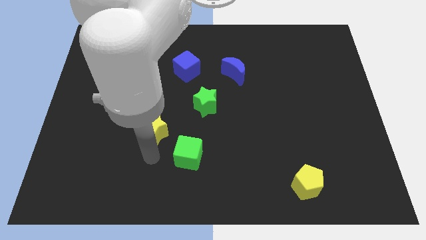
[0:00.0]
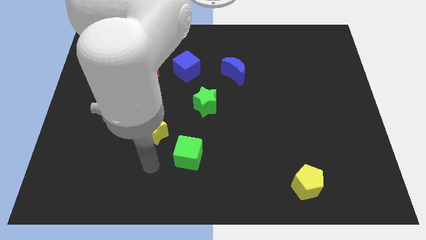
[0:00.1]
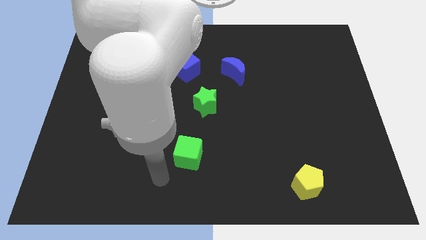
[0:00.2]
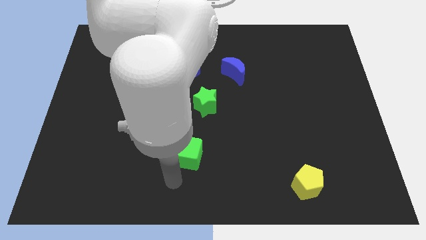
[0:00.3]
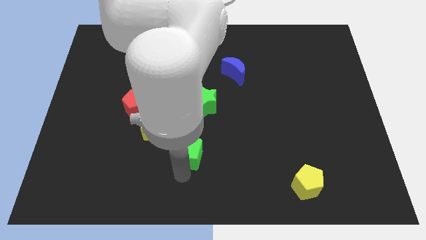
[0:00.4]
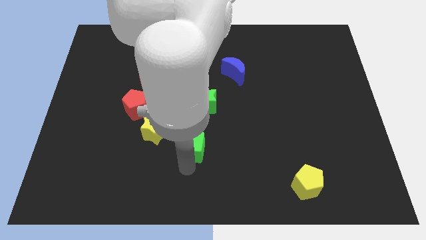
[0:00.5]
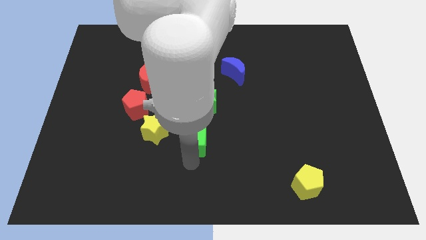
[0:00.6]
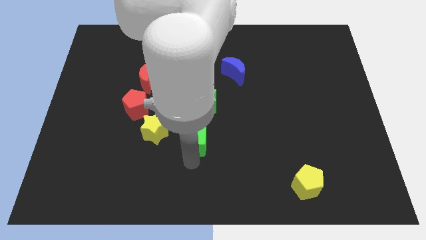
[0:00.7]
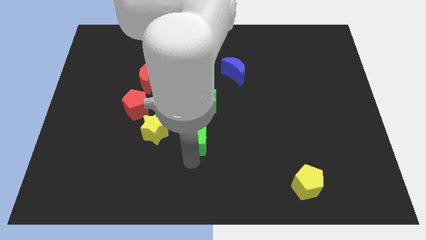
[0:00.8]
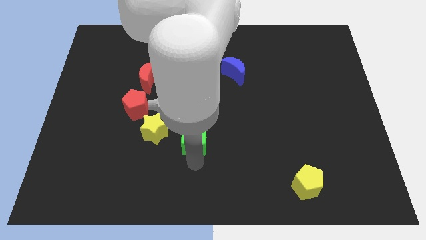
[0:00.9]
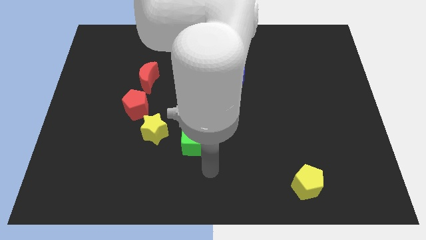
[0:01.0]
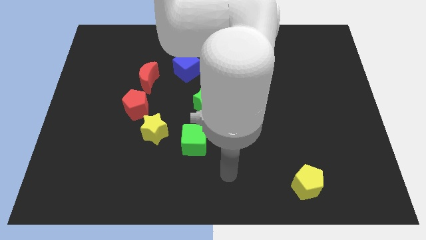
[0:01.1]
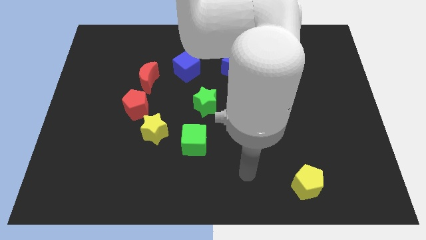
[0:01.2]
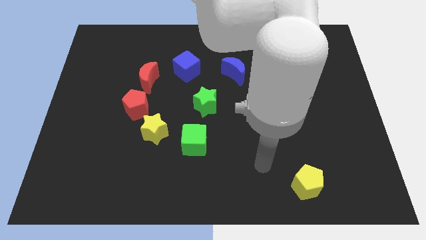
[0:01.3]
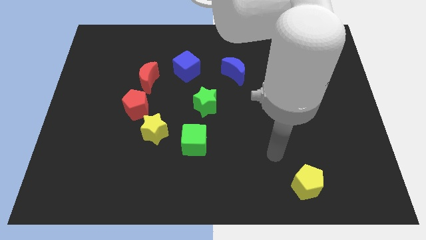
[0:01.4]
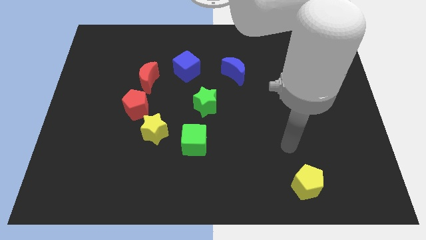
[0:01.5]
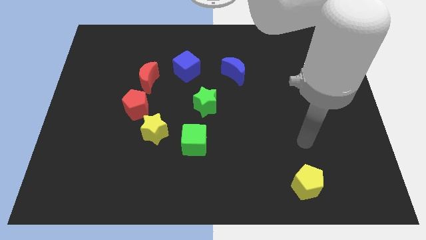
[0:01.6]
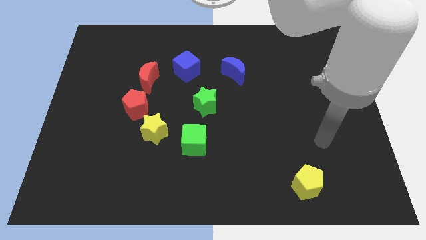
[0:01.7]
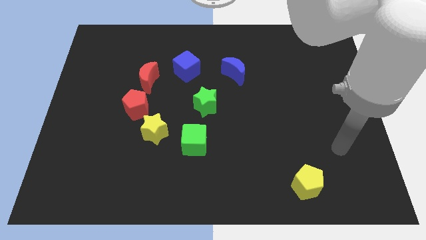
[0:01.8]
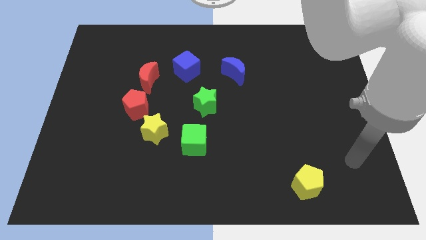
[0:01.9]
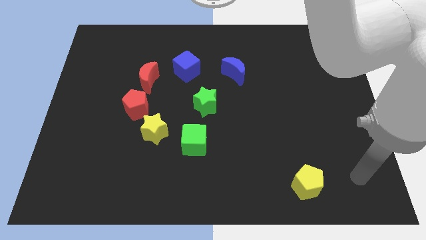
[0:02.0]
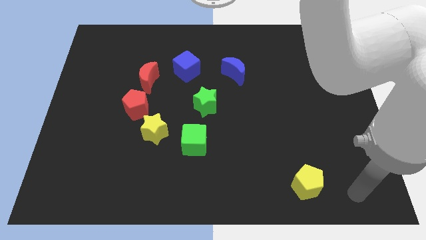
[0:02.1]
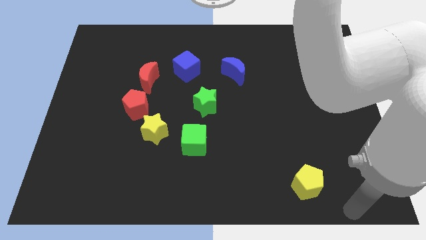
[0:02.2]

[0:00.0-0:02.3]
push the green cube on the right side of the yellow star

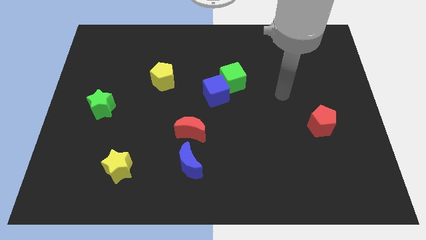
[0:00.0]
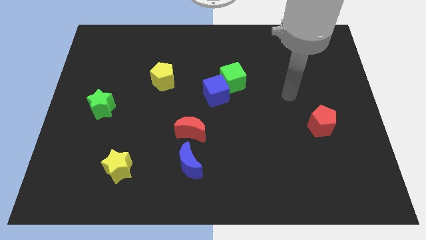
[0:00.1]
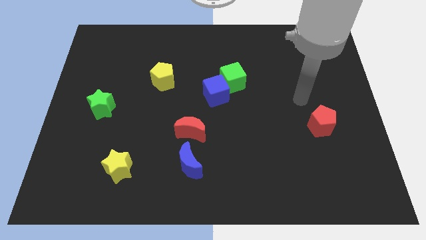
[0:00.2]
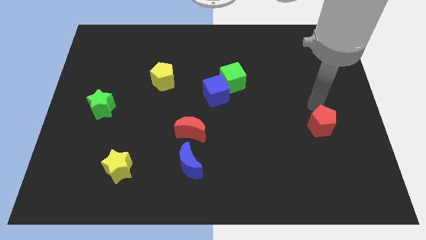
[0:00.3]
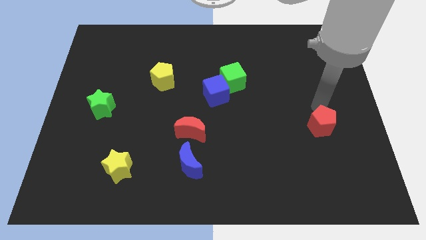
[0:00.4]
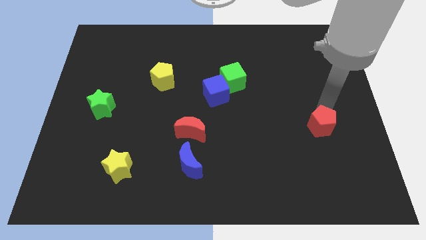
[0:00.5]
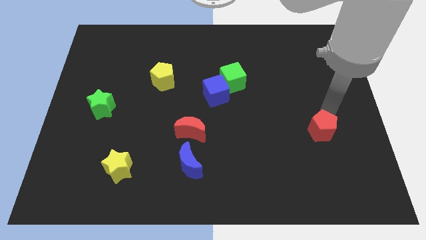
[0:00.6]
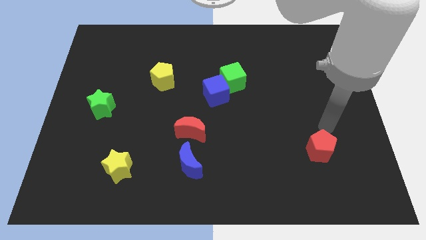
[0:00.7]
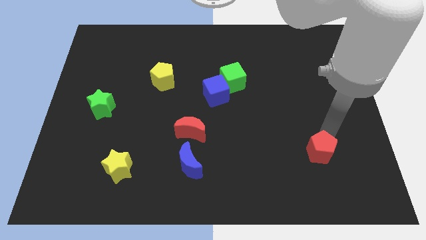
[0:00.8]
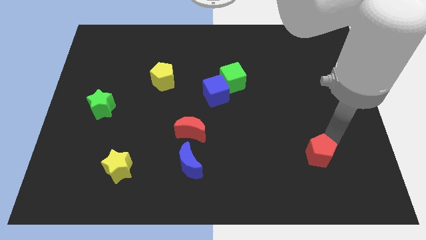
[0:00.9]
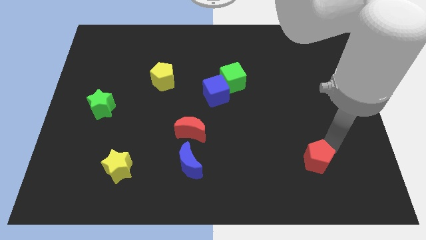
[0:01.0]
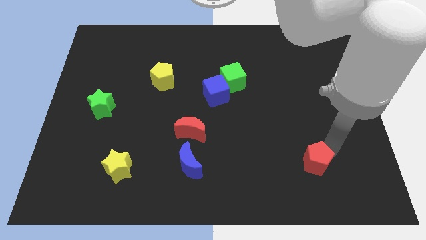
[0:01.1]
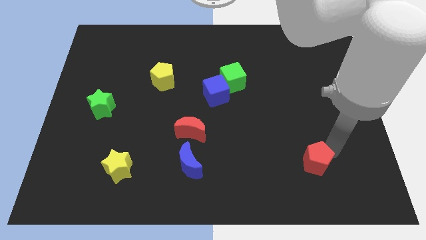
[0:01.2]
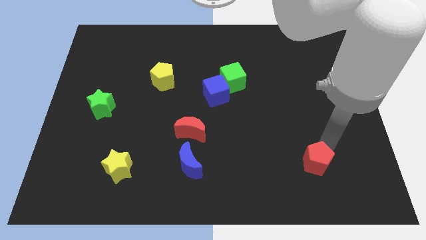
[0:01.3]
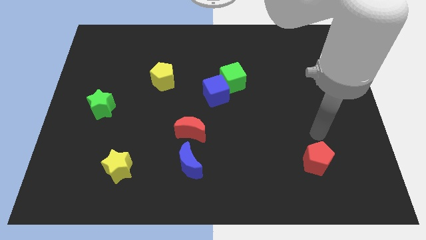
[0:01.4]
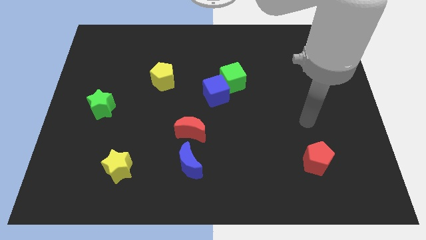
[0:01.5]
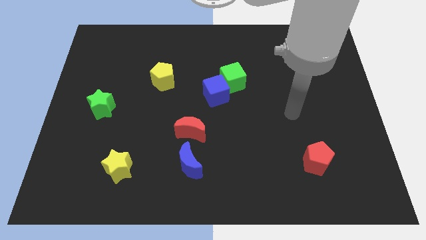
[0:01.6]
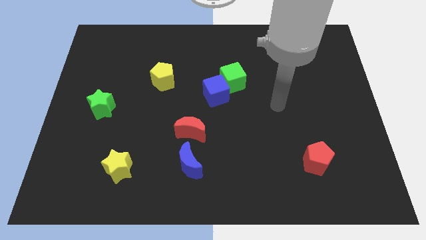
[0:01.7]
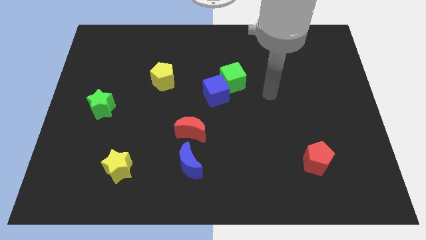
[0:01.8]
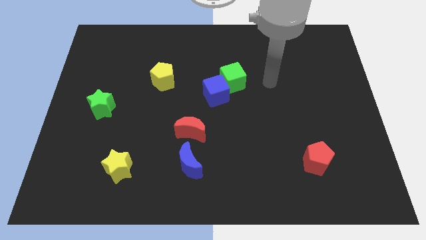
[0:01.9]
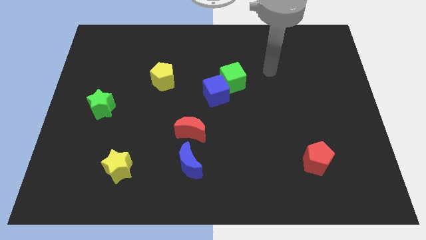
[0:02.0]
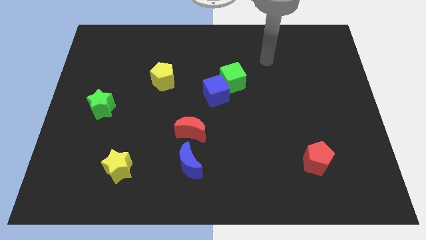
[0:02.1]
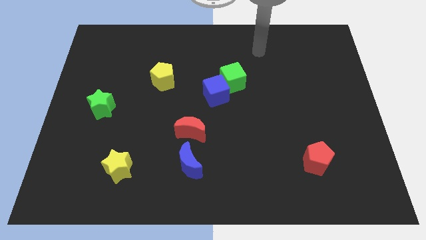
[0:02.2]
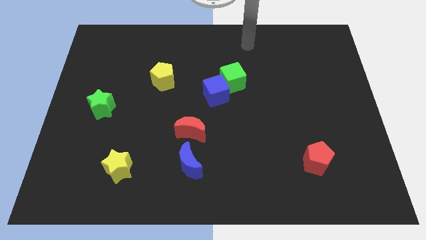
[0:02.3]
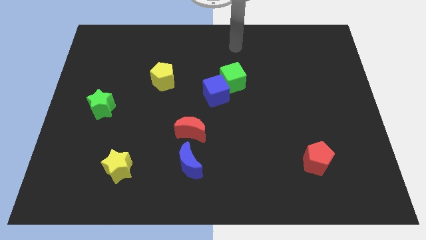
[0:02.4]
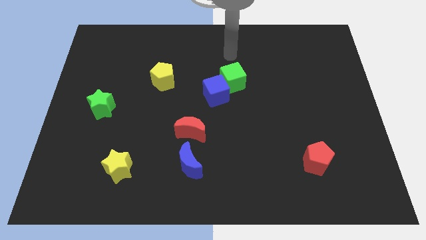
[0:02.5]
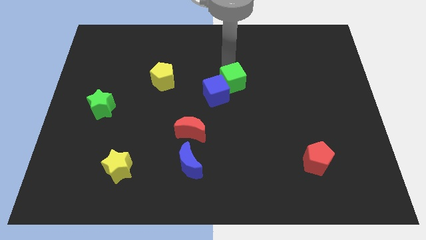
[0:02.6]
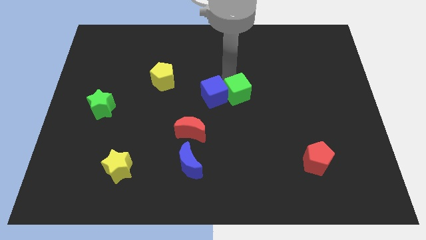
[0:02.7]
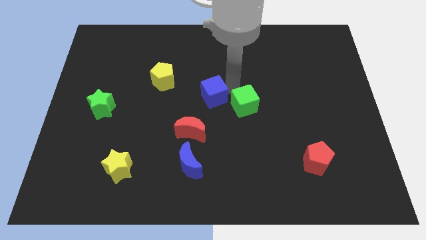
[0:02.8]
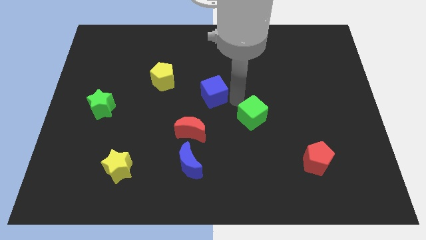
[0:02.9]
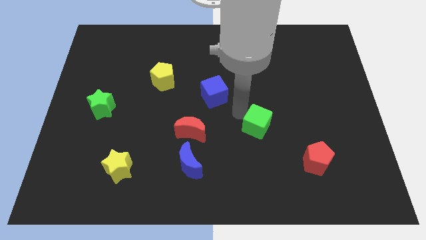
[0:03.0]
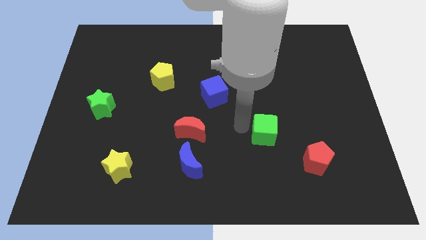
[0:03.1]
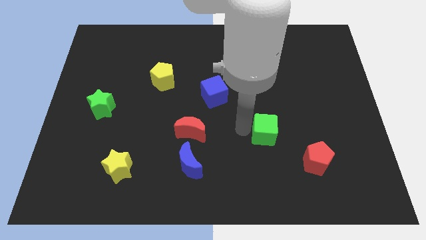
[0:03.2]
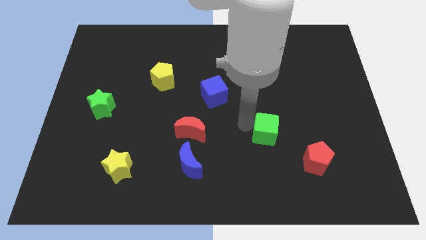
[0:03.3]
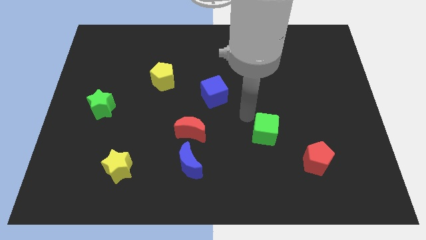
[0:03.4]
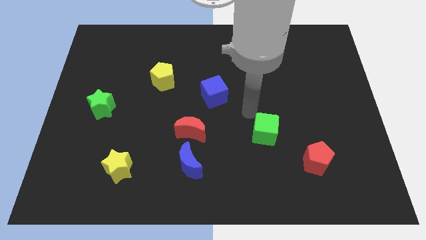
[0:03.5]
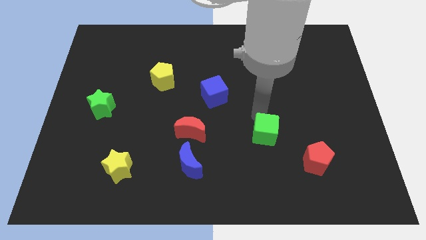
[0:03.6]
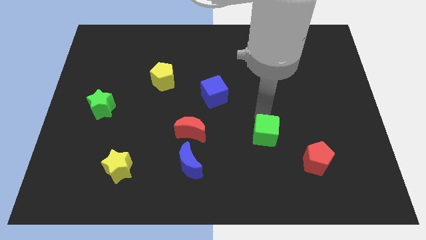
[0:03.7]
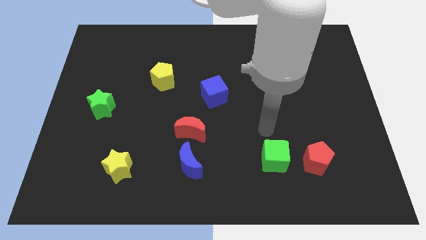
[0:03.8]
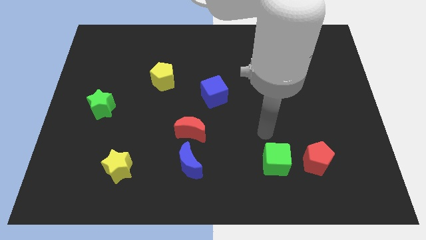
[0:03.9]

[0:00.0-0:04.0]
push red pentagon and green cube together

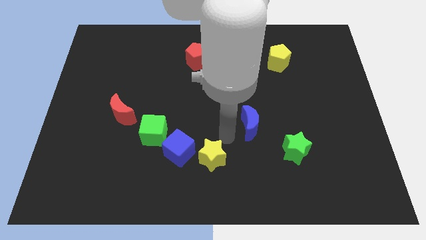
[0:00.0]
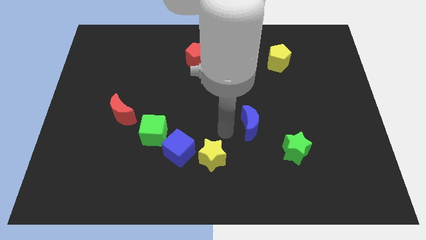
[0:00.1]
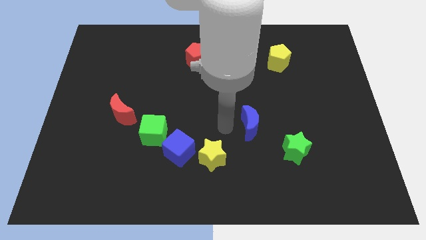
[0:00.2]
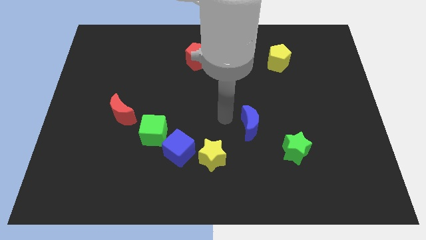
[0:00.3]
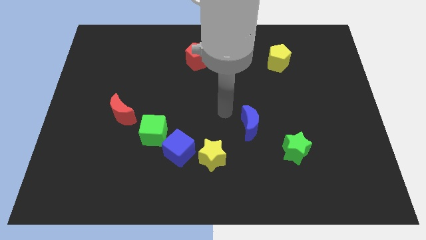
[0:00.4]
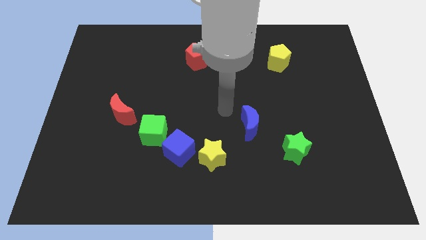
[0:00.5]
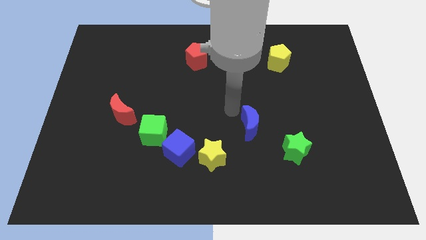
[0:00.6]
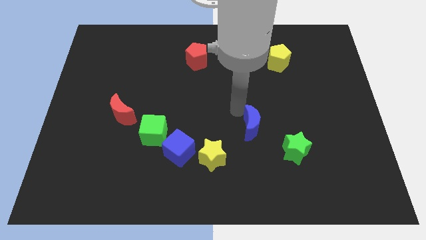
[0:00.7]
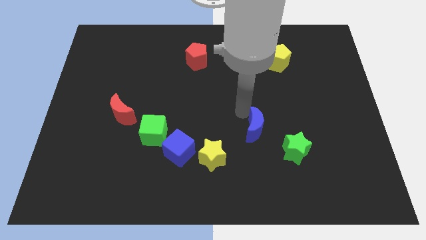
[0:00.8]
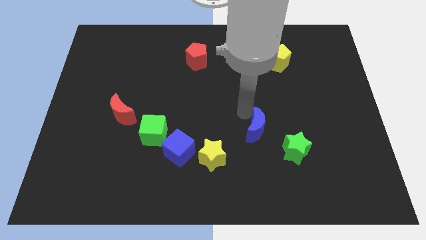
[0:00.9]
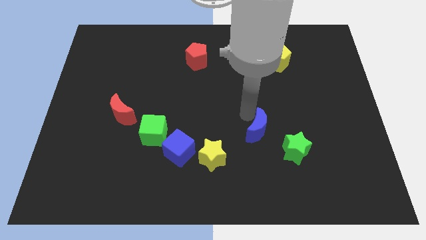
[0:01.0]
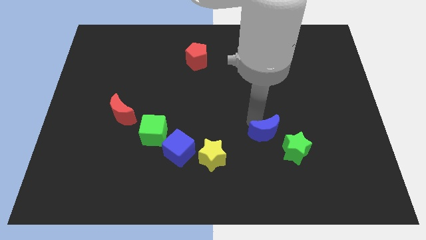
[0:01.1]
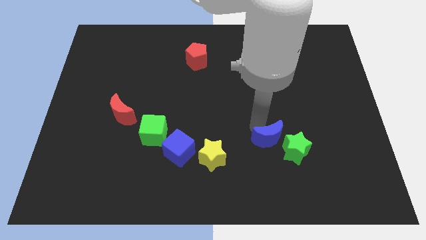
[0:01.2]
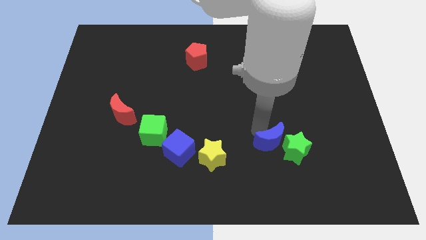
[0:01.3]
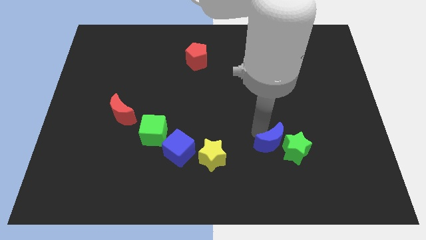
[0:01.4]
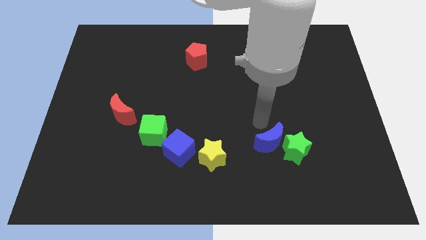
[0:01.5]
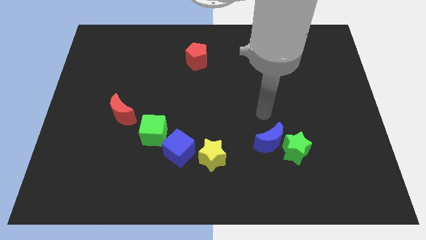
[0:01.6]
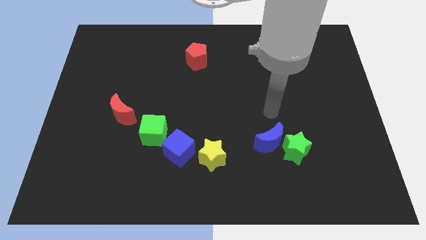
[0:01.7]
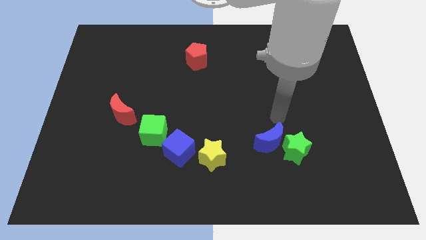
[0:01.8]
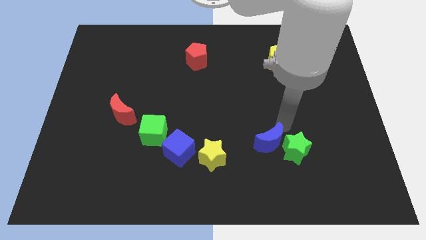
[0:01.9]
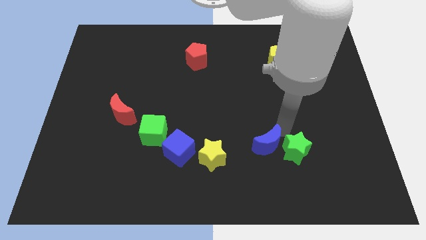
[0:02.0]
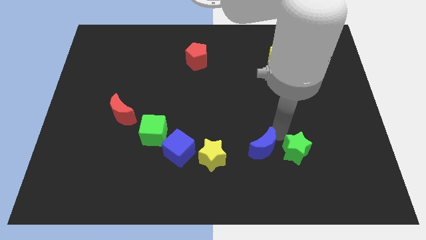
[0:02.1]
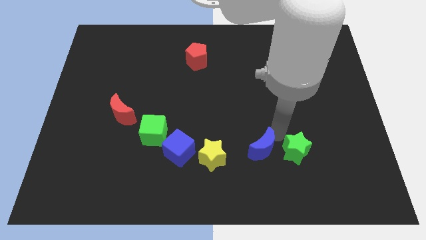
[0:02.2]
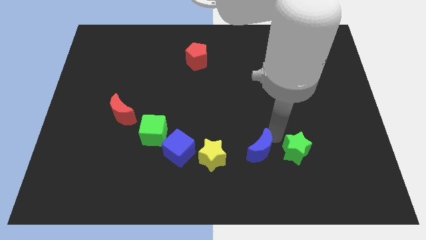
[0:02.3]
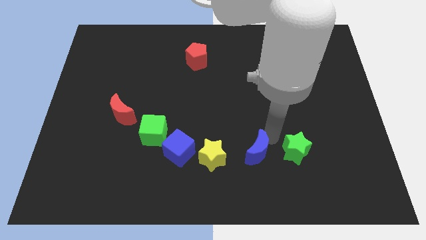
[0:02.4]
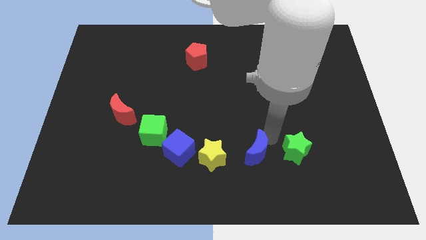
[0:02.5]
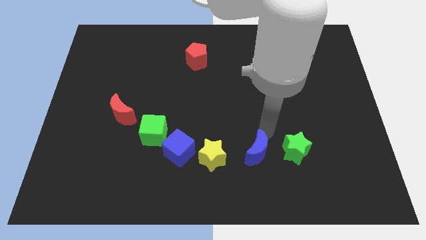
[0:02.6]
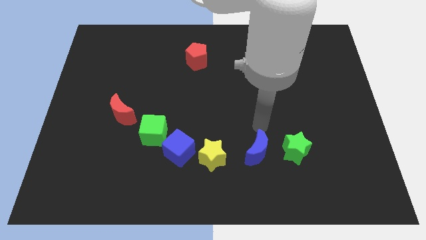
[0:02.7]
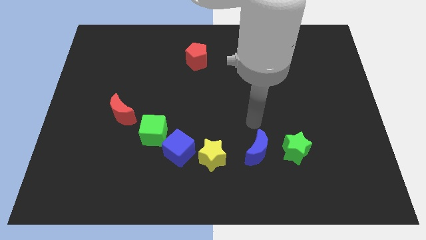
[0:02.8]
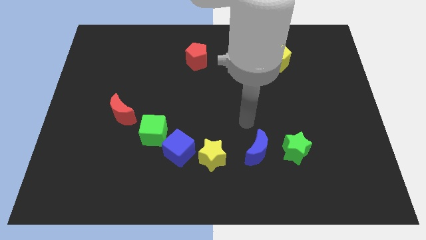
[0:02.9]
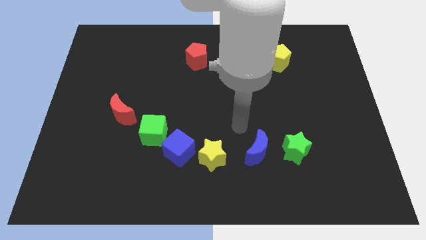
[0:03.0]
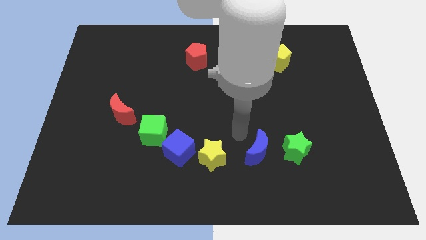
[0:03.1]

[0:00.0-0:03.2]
place the blue moon in between the green star and yellow star
